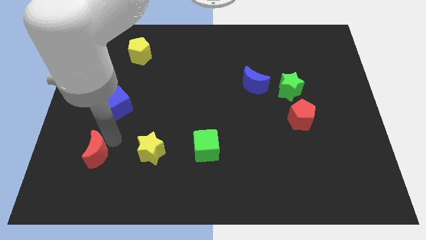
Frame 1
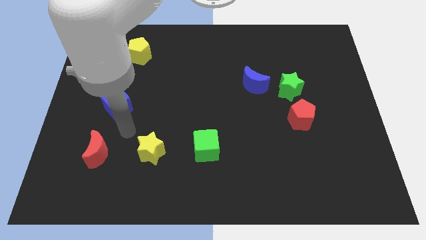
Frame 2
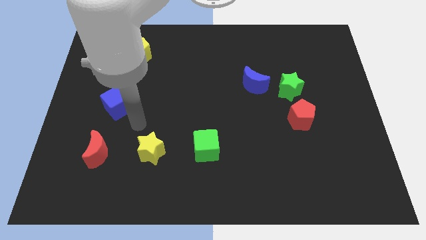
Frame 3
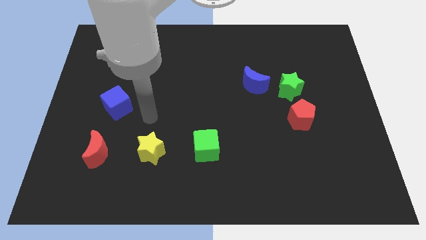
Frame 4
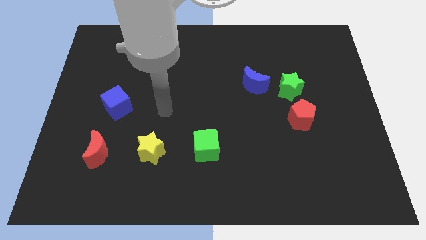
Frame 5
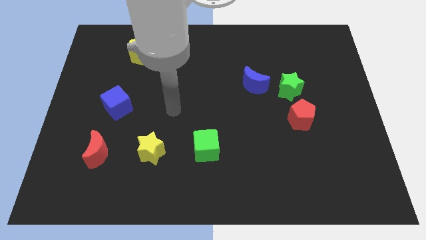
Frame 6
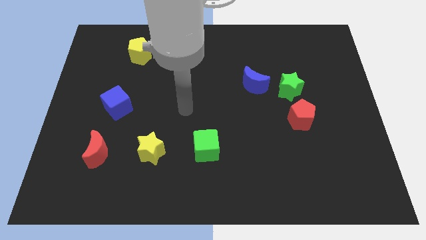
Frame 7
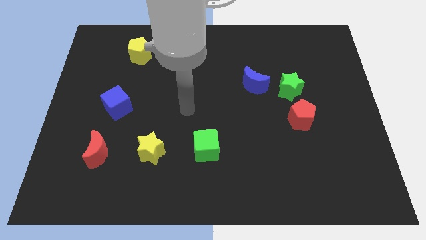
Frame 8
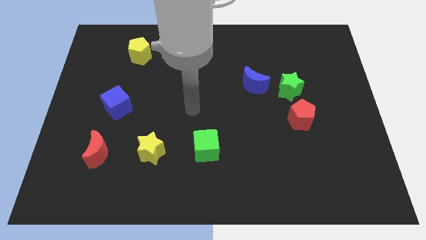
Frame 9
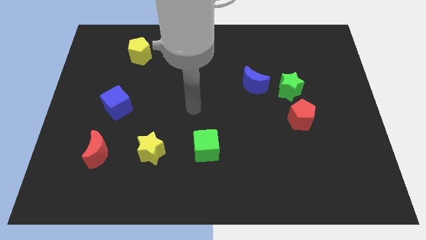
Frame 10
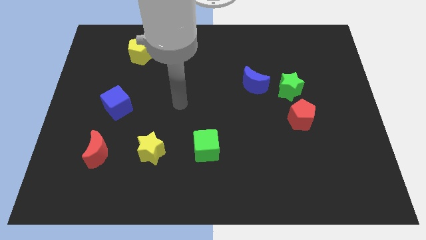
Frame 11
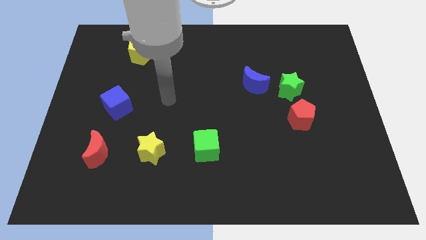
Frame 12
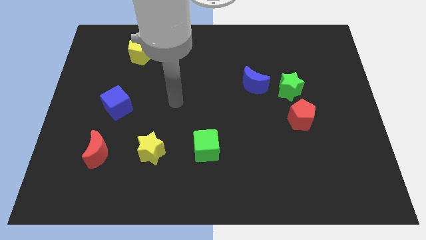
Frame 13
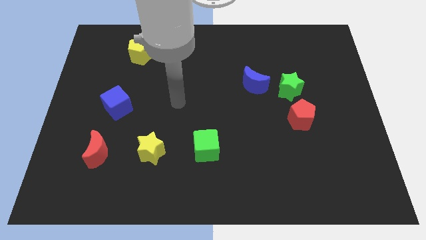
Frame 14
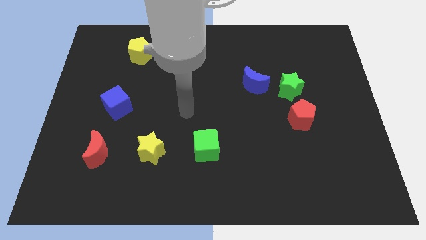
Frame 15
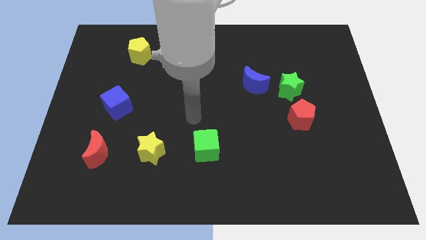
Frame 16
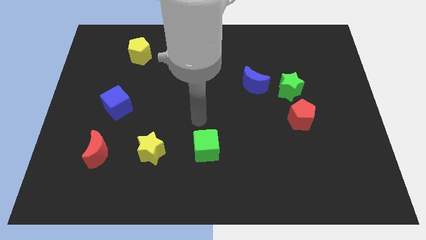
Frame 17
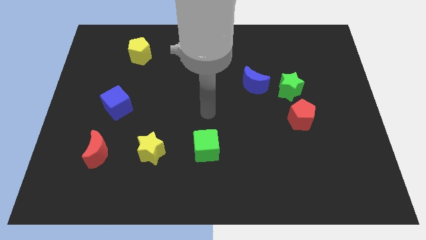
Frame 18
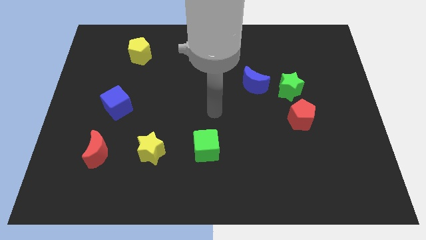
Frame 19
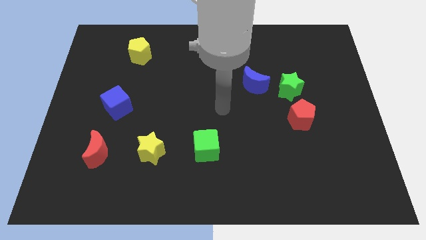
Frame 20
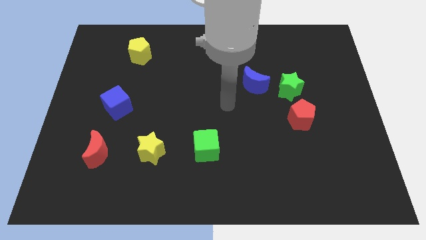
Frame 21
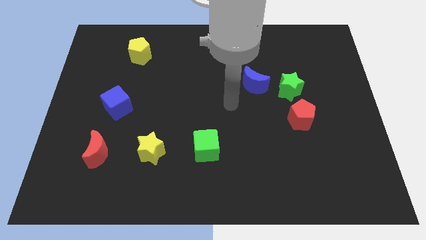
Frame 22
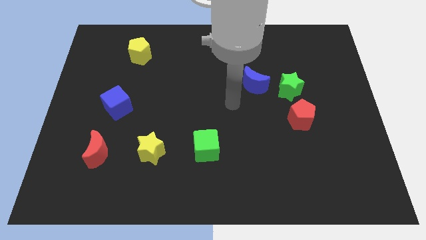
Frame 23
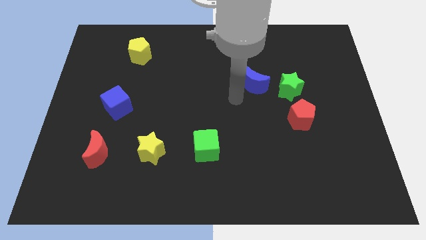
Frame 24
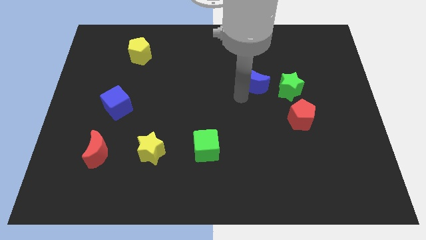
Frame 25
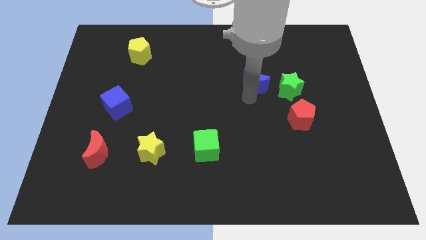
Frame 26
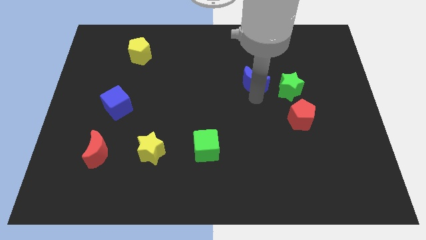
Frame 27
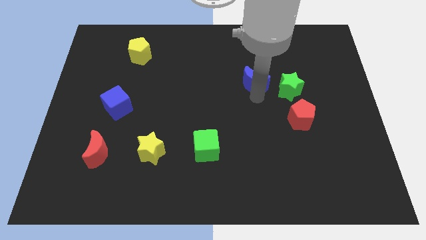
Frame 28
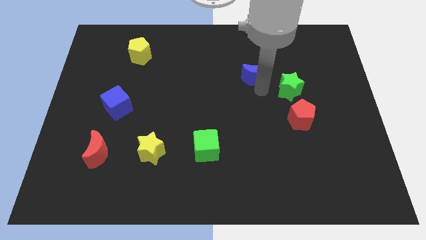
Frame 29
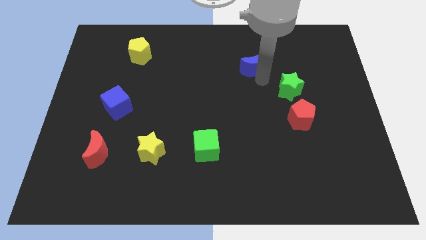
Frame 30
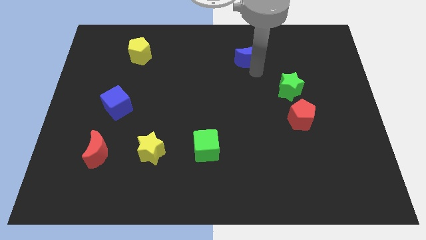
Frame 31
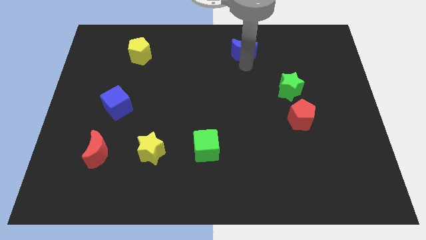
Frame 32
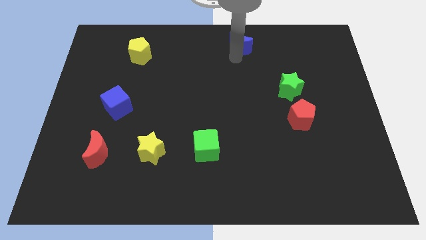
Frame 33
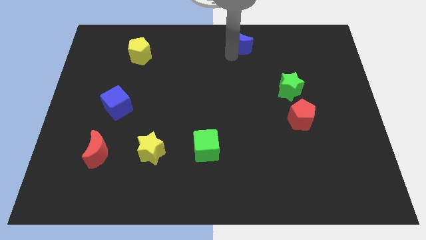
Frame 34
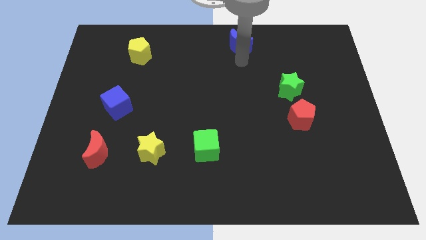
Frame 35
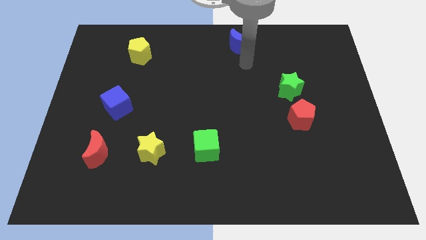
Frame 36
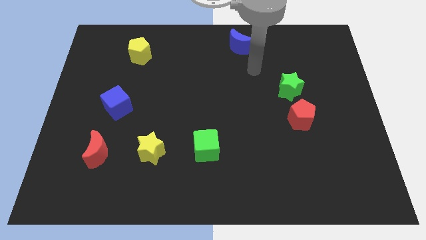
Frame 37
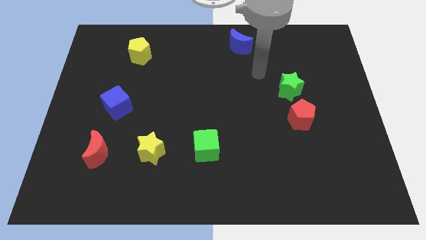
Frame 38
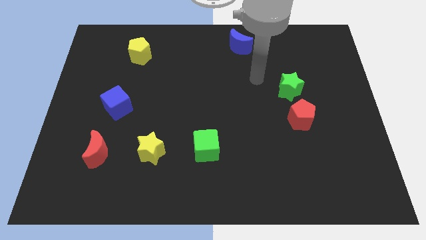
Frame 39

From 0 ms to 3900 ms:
push the blue crescent towards the top center of the board

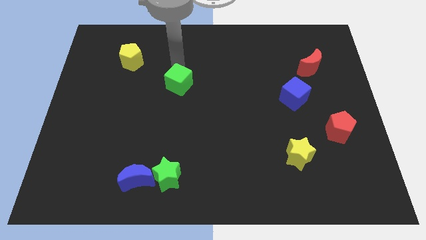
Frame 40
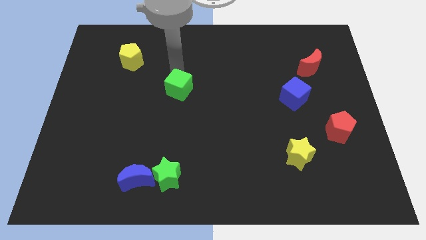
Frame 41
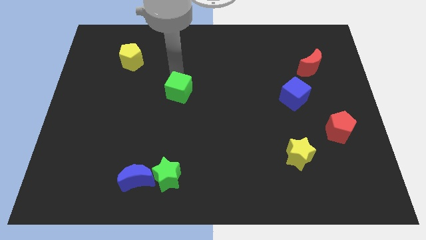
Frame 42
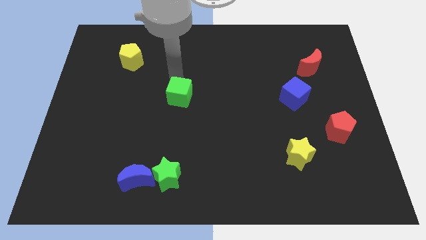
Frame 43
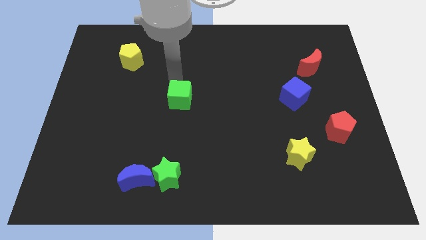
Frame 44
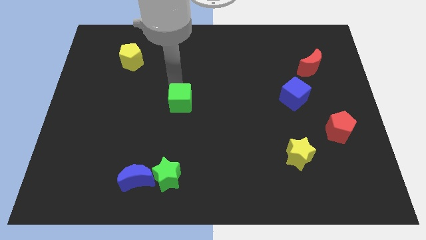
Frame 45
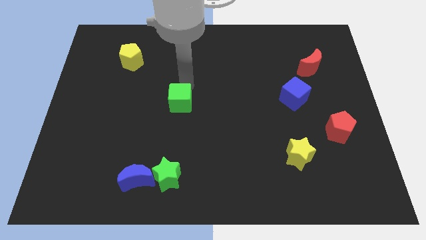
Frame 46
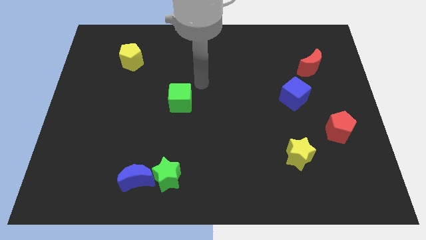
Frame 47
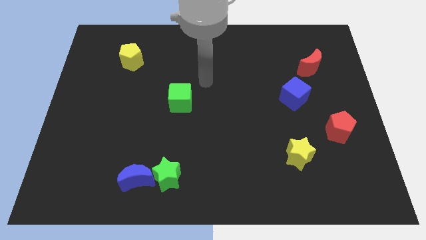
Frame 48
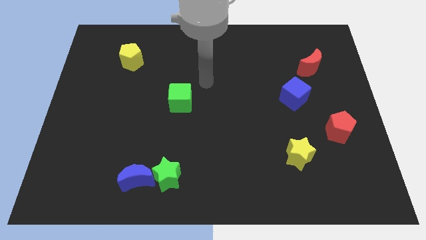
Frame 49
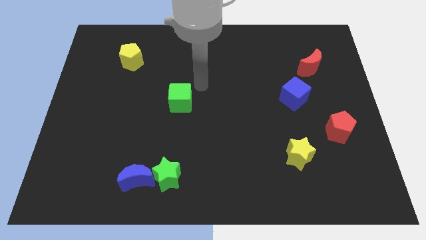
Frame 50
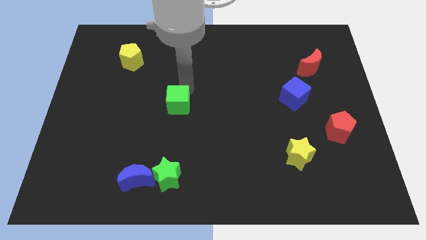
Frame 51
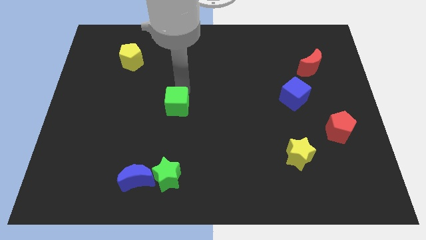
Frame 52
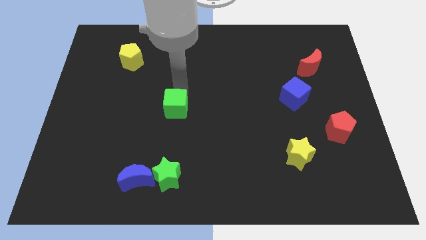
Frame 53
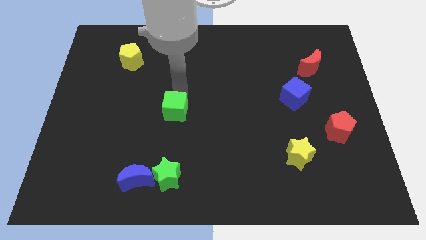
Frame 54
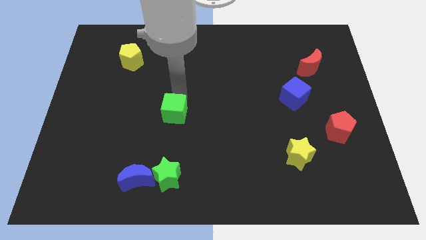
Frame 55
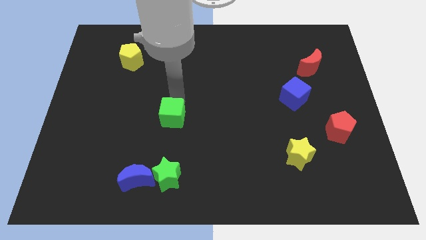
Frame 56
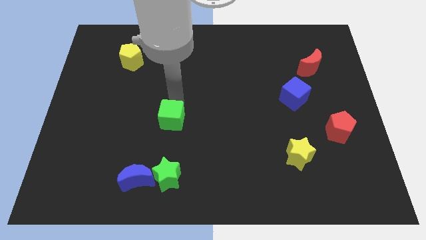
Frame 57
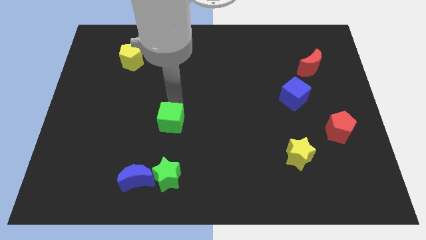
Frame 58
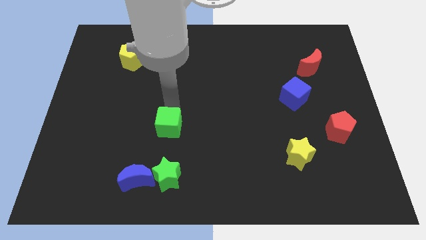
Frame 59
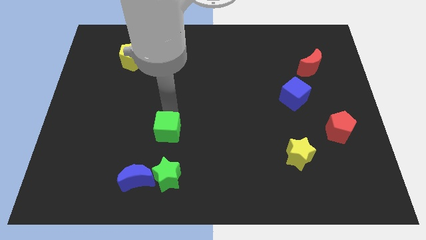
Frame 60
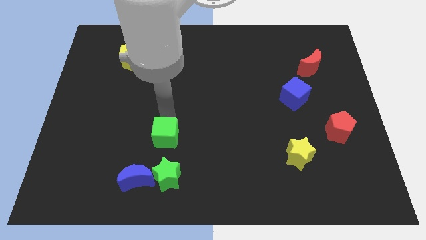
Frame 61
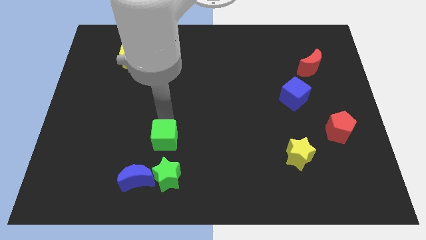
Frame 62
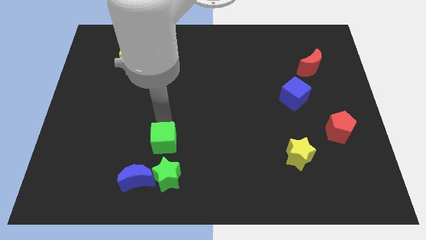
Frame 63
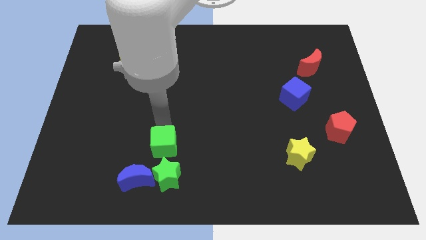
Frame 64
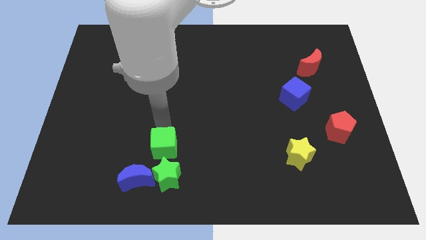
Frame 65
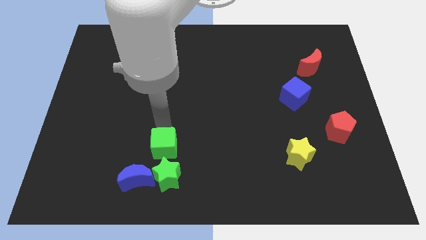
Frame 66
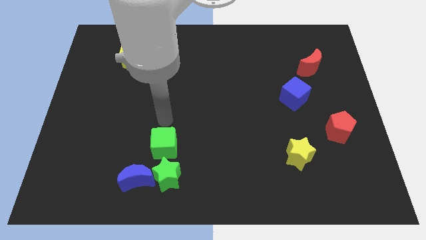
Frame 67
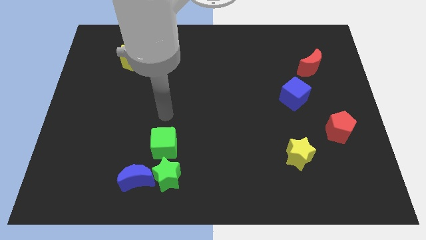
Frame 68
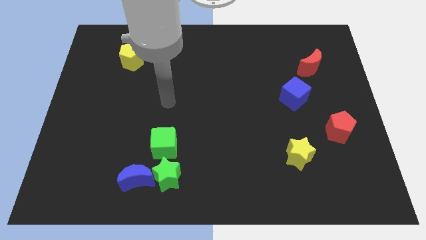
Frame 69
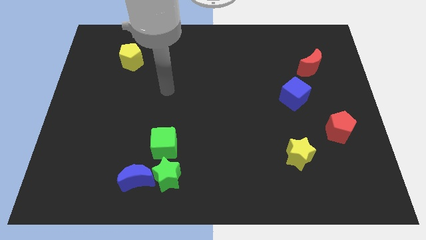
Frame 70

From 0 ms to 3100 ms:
place the green cube left to the yellow star

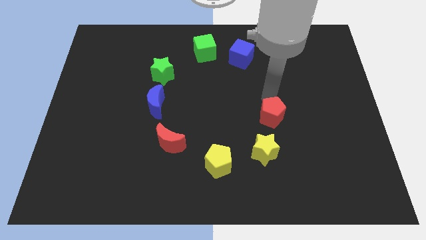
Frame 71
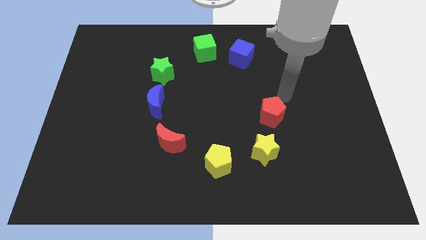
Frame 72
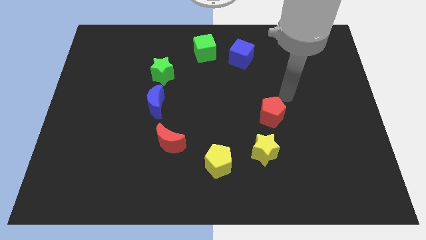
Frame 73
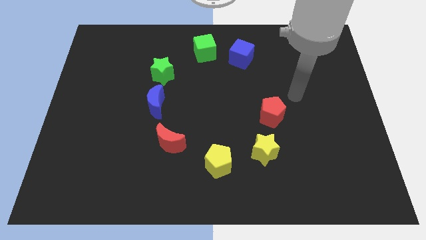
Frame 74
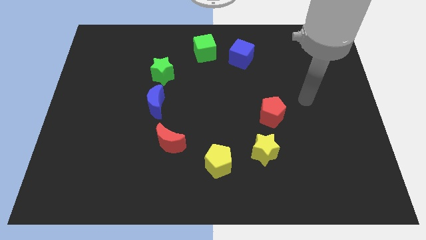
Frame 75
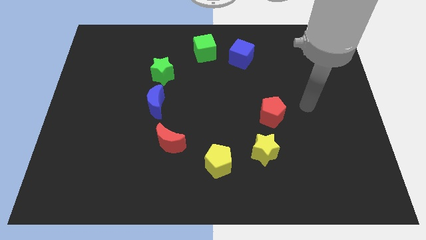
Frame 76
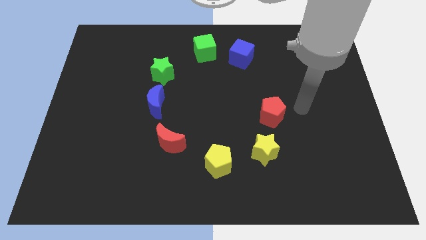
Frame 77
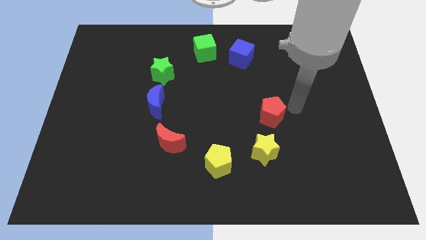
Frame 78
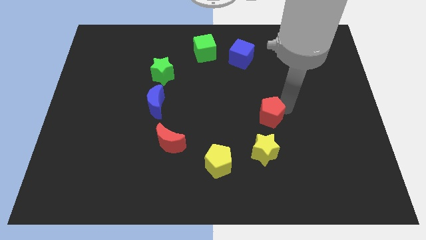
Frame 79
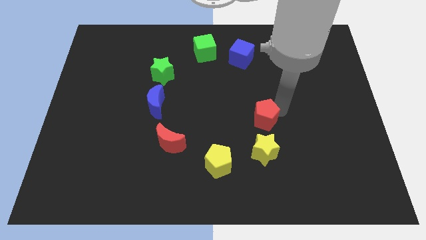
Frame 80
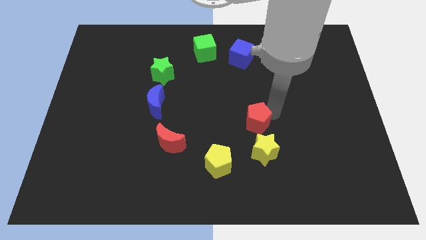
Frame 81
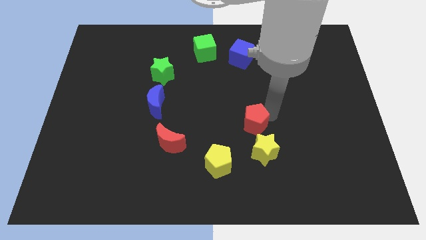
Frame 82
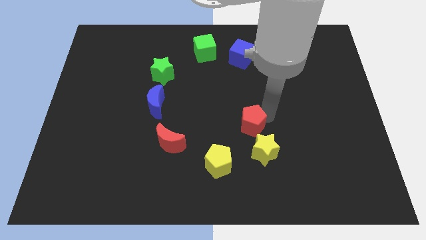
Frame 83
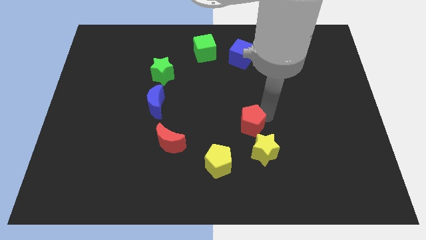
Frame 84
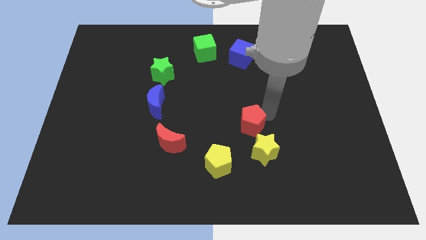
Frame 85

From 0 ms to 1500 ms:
move the red pentagon to the top left side of the yellow star

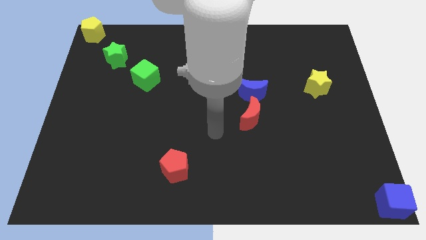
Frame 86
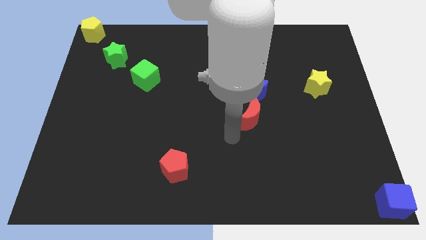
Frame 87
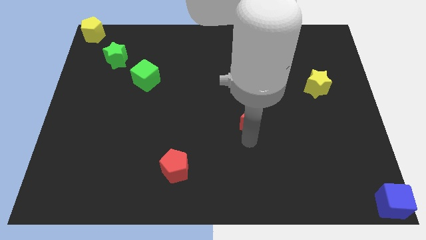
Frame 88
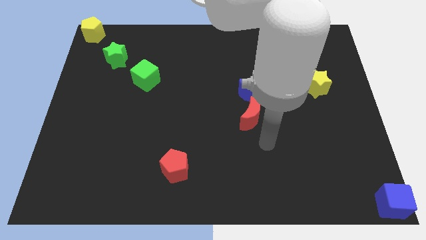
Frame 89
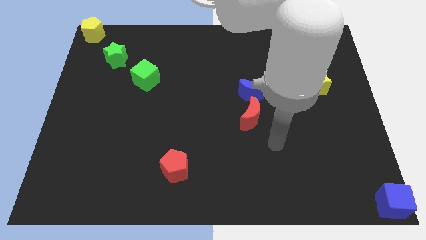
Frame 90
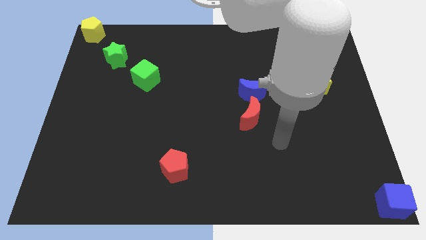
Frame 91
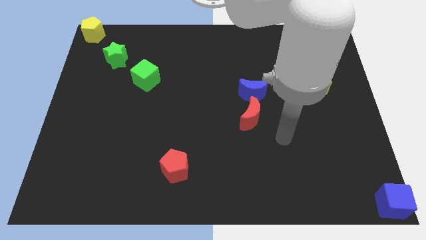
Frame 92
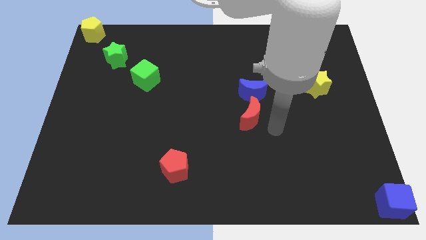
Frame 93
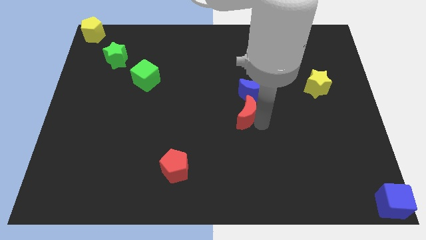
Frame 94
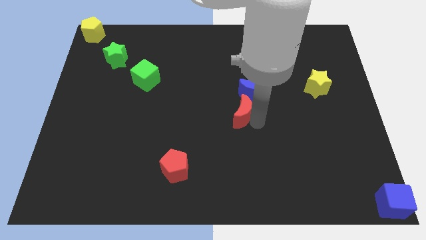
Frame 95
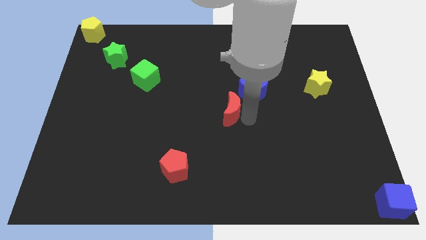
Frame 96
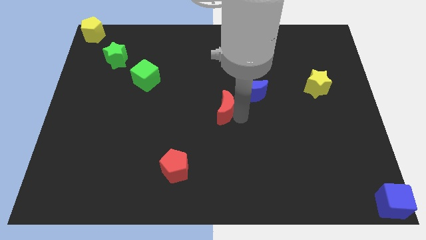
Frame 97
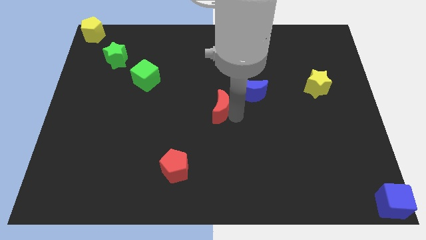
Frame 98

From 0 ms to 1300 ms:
push the red moon to the center of the board
